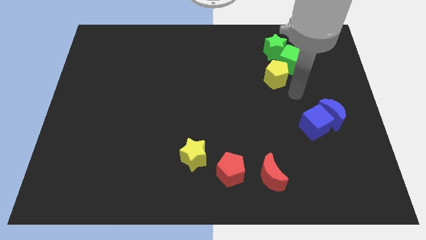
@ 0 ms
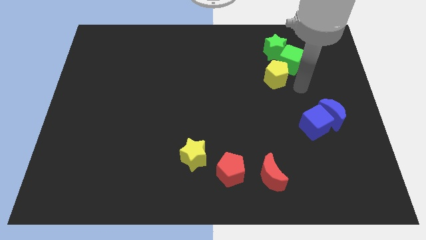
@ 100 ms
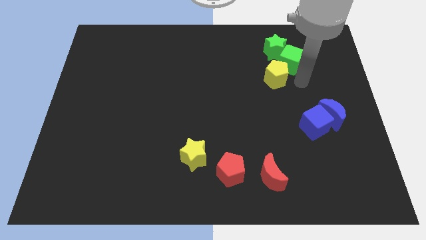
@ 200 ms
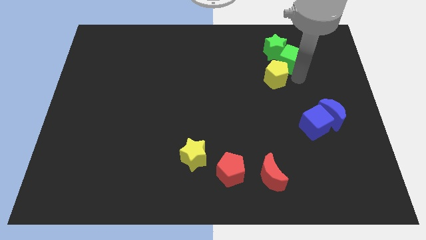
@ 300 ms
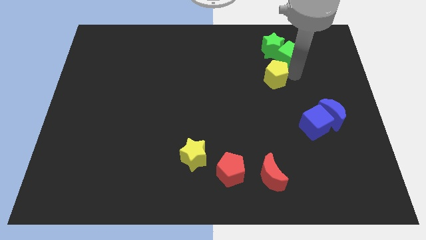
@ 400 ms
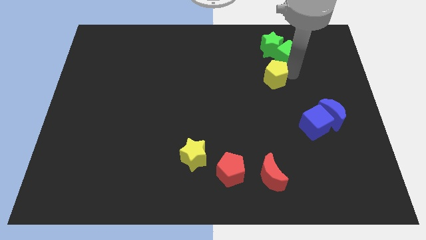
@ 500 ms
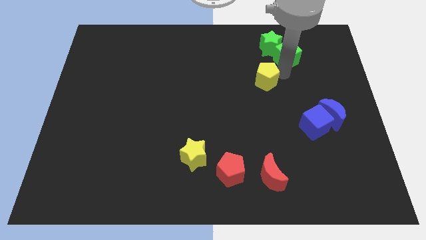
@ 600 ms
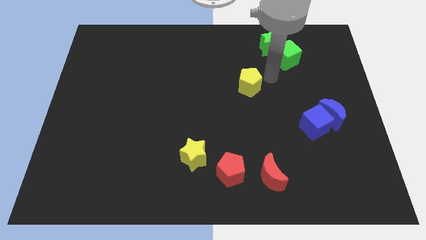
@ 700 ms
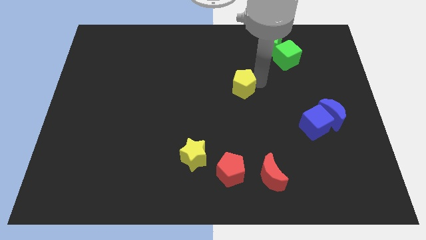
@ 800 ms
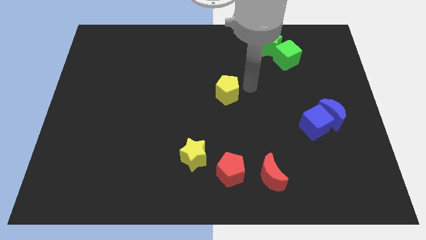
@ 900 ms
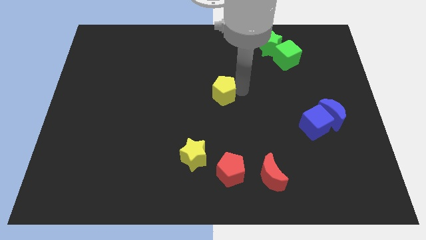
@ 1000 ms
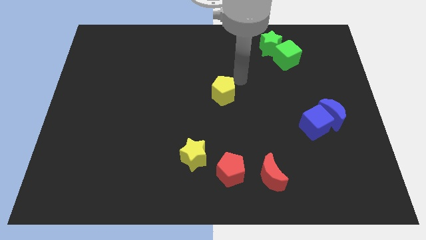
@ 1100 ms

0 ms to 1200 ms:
separate yellow pentagon from green cube

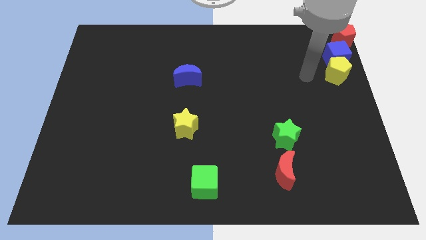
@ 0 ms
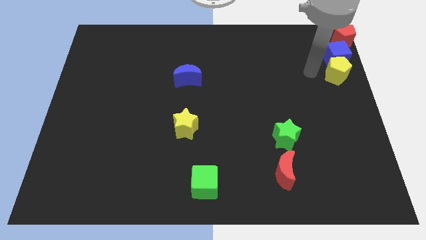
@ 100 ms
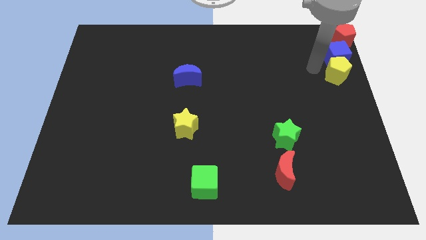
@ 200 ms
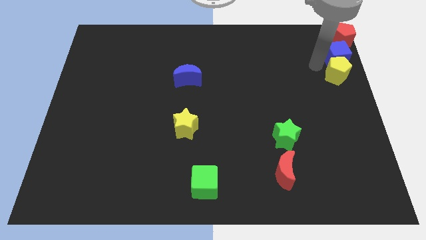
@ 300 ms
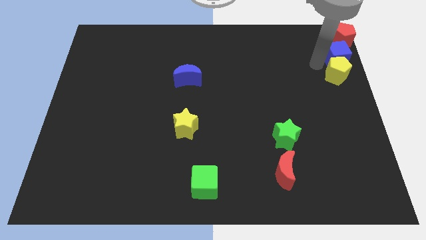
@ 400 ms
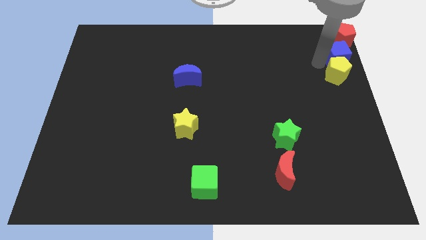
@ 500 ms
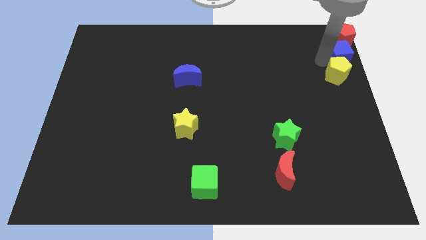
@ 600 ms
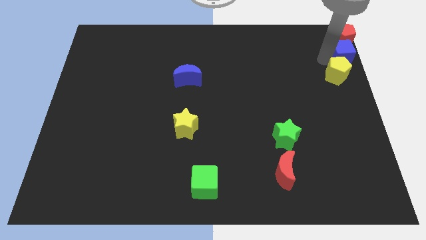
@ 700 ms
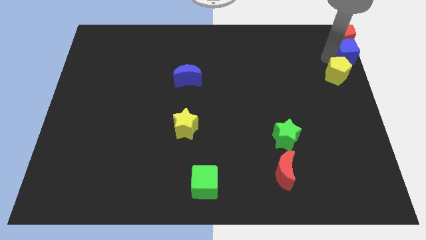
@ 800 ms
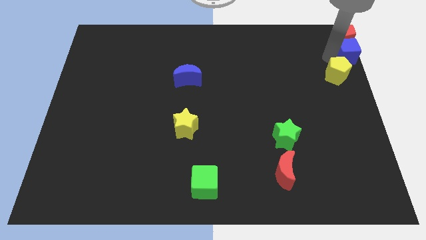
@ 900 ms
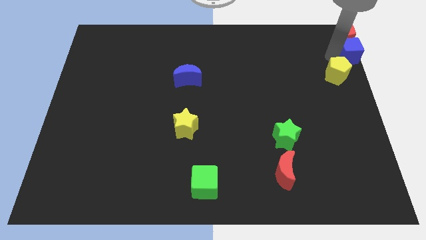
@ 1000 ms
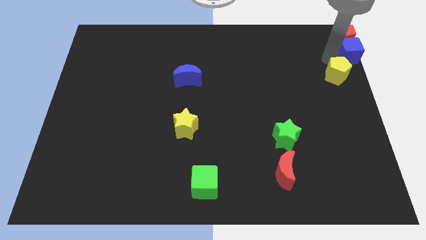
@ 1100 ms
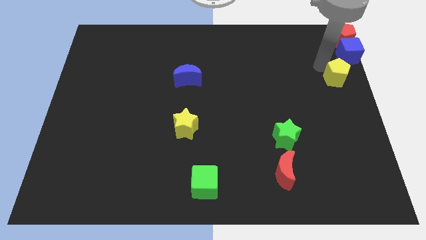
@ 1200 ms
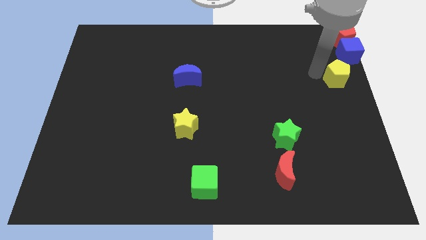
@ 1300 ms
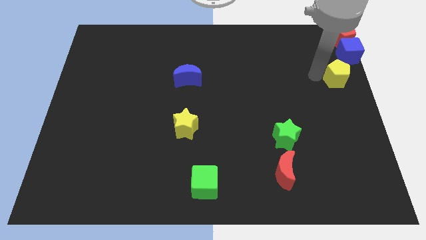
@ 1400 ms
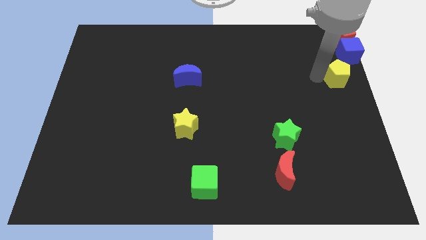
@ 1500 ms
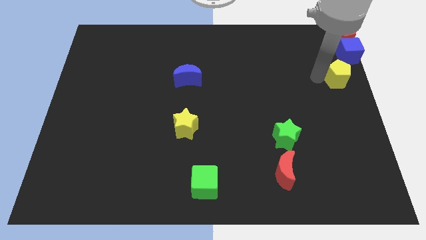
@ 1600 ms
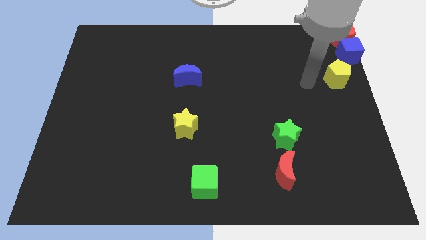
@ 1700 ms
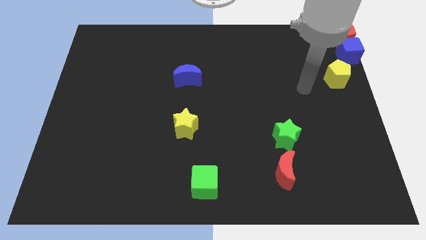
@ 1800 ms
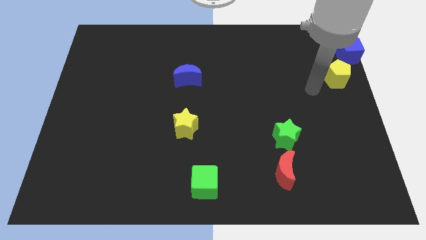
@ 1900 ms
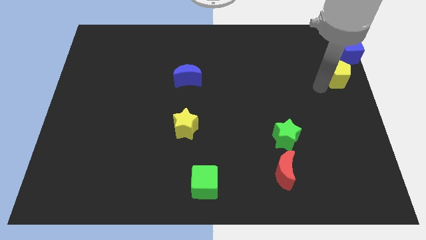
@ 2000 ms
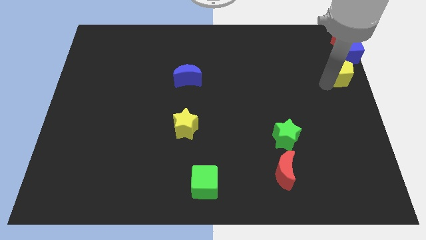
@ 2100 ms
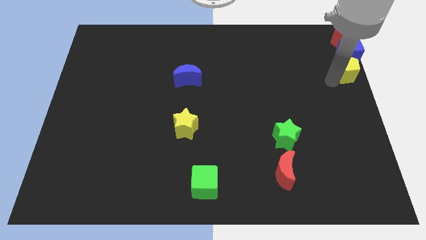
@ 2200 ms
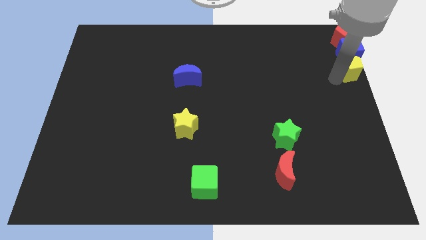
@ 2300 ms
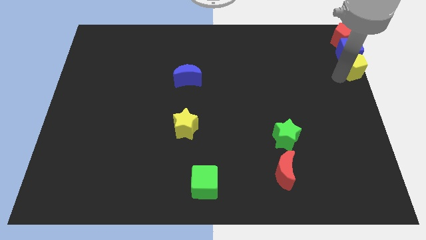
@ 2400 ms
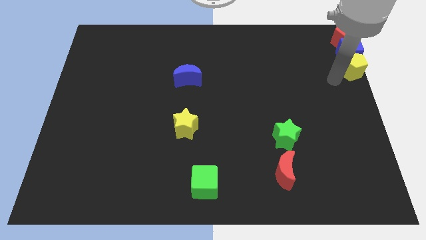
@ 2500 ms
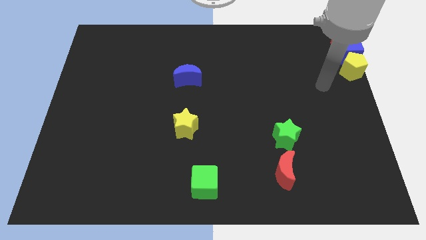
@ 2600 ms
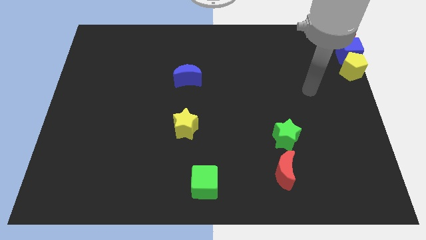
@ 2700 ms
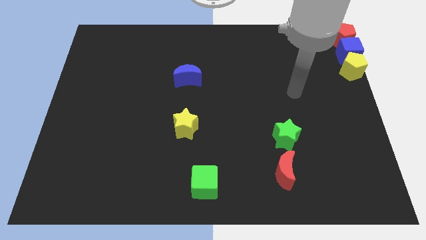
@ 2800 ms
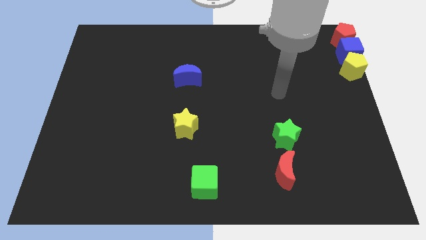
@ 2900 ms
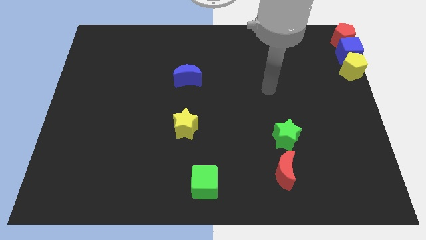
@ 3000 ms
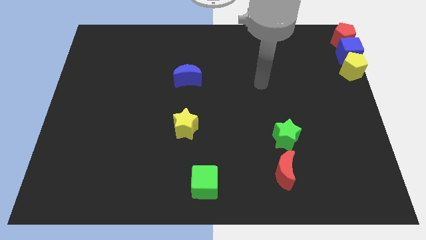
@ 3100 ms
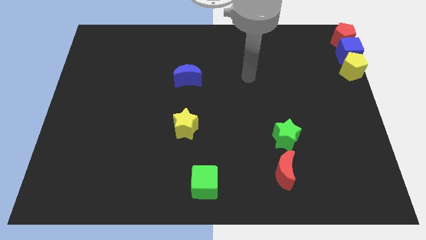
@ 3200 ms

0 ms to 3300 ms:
move the yellow pentagon and the blue cube towards the red pentagon

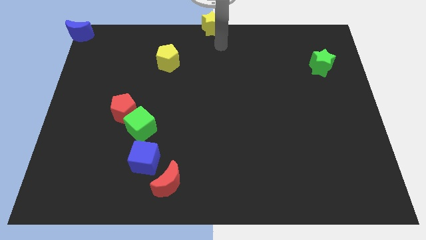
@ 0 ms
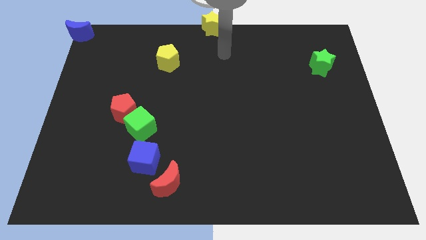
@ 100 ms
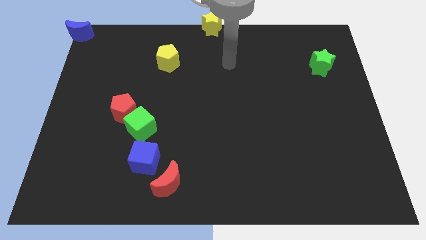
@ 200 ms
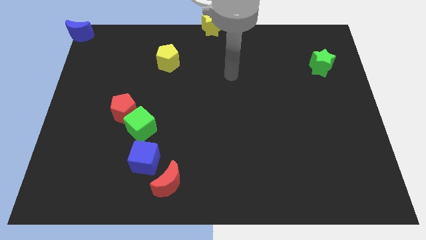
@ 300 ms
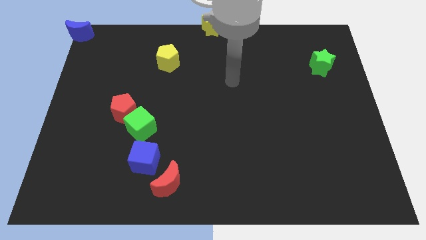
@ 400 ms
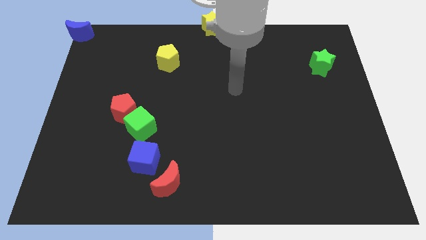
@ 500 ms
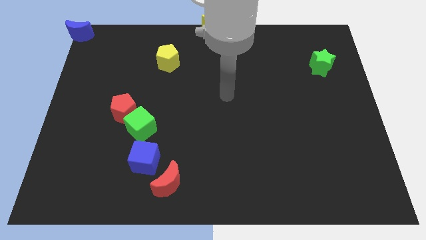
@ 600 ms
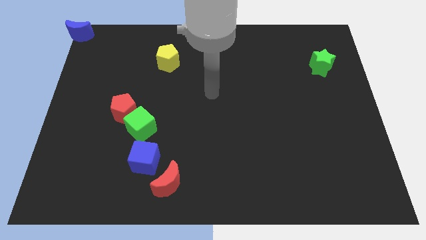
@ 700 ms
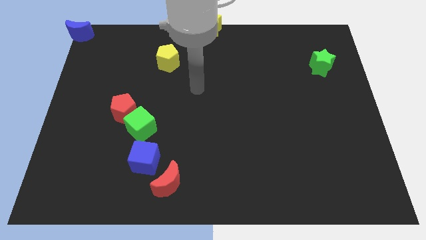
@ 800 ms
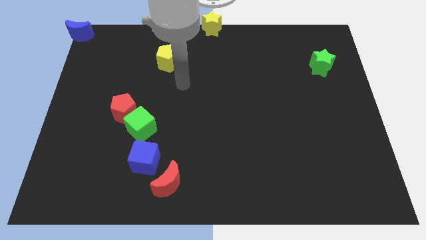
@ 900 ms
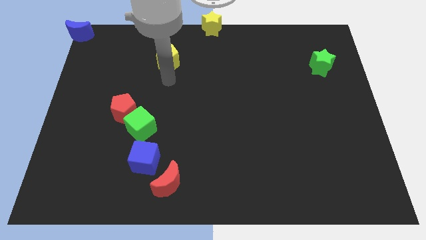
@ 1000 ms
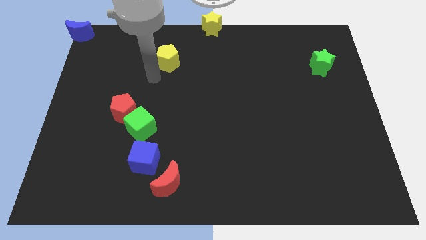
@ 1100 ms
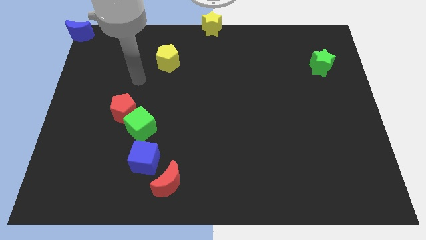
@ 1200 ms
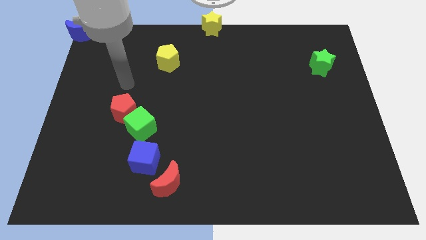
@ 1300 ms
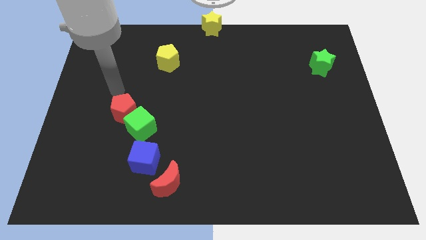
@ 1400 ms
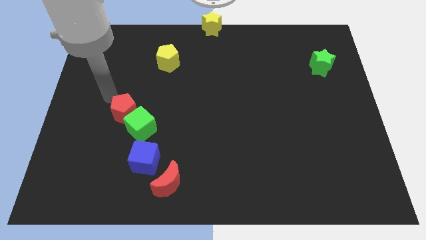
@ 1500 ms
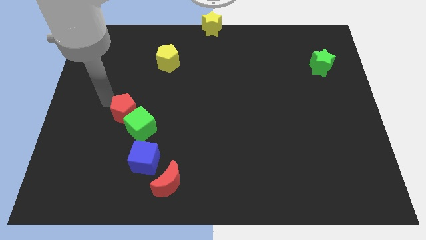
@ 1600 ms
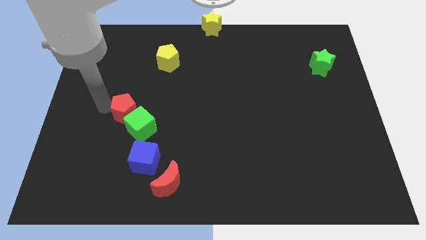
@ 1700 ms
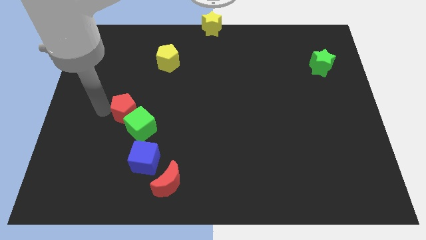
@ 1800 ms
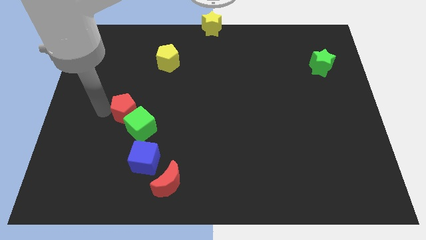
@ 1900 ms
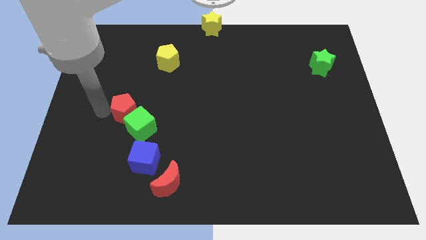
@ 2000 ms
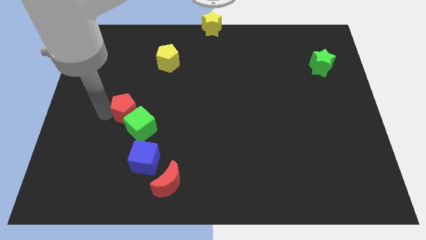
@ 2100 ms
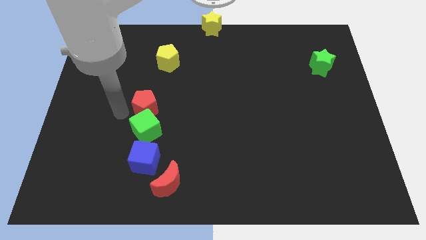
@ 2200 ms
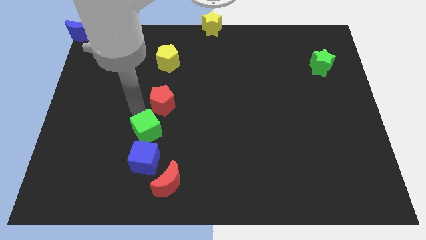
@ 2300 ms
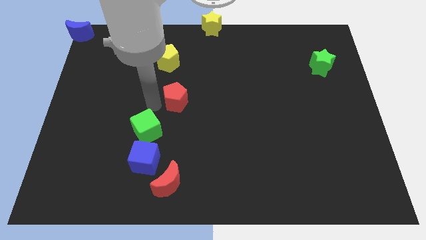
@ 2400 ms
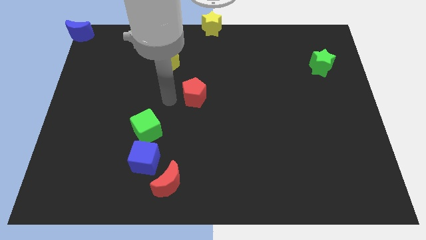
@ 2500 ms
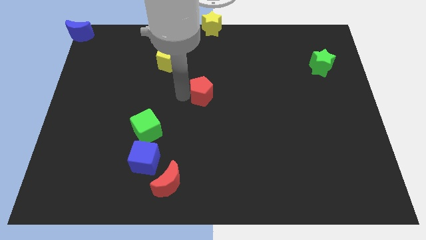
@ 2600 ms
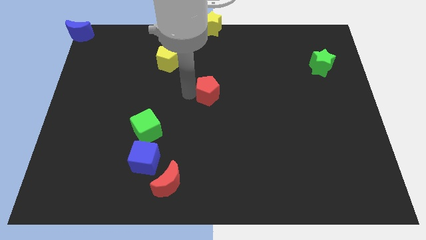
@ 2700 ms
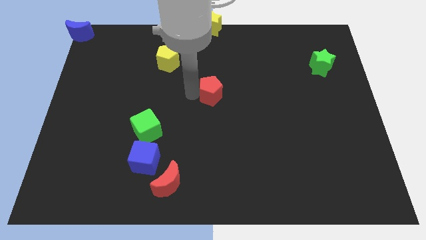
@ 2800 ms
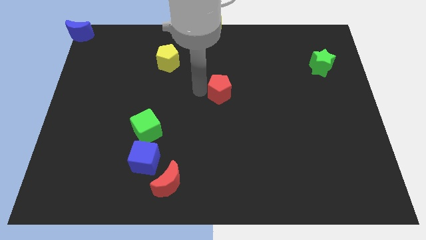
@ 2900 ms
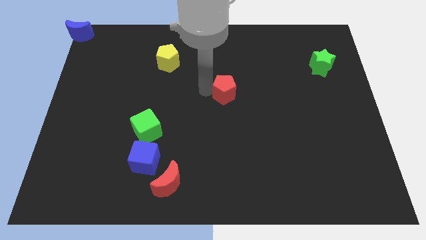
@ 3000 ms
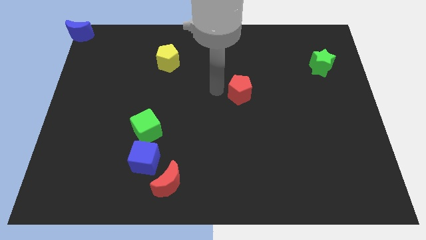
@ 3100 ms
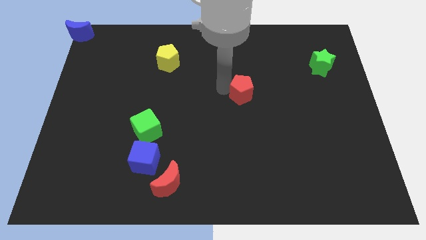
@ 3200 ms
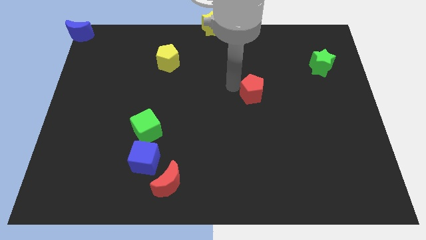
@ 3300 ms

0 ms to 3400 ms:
slide the red pentagon towards the center right side of the board

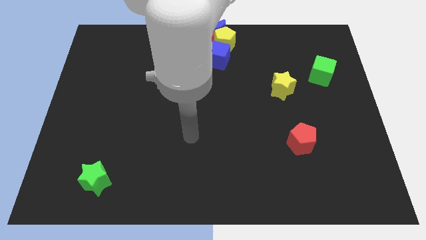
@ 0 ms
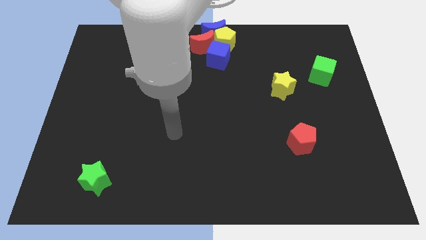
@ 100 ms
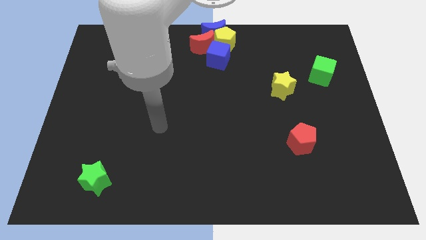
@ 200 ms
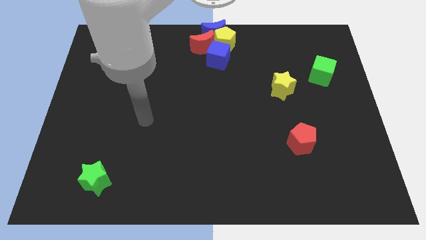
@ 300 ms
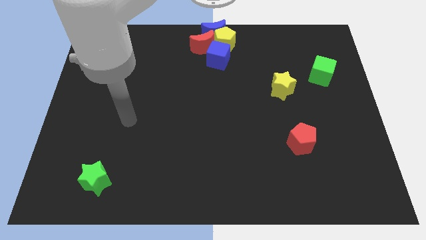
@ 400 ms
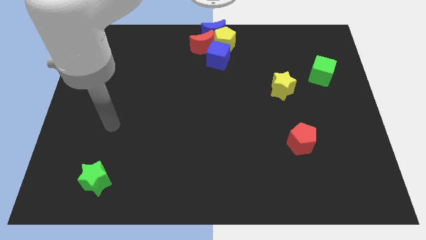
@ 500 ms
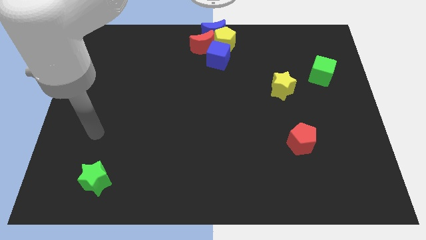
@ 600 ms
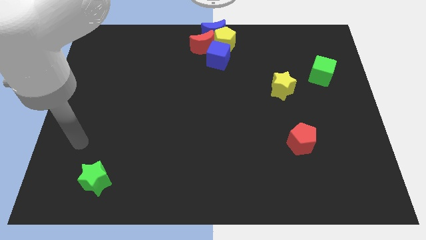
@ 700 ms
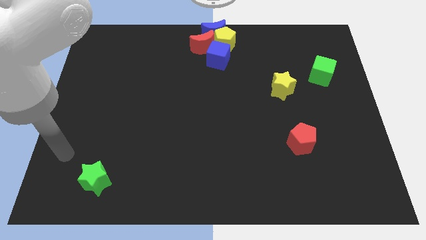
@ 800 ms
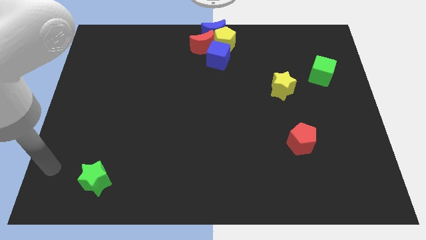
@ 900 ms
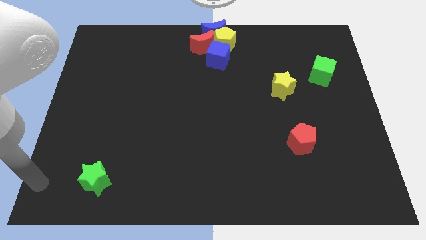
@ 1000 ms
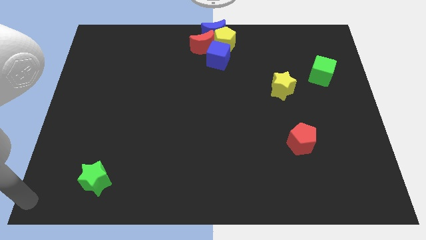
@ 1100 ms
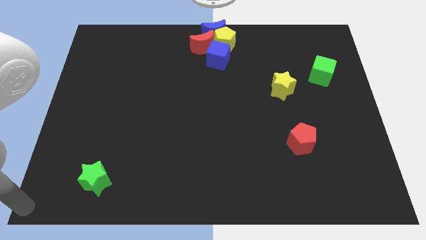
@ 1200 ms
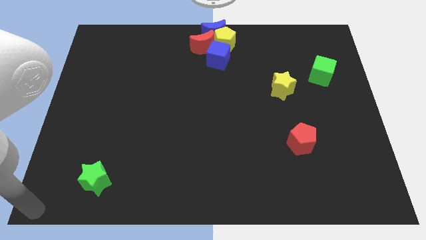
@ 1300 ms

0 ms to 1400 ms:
put your hand at the bottom left corner
